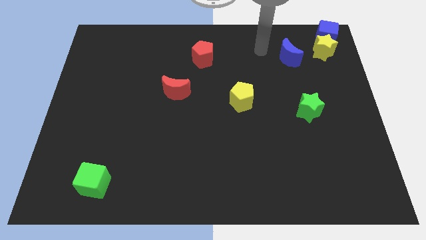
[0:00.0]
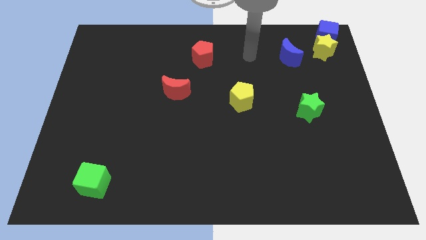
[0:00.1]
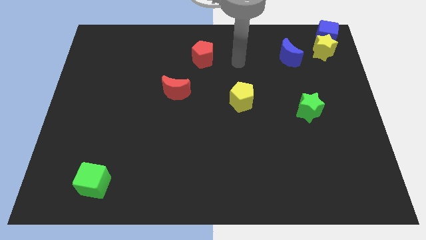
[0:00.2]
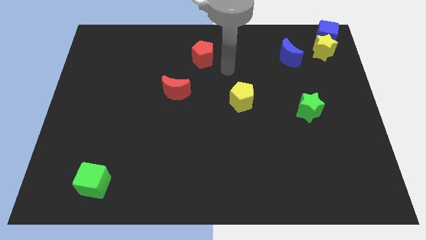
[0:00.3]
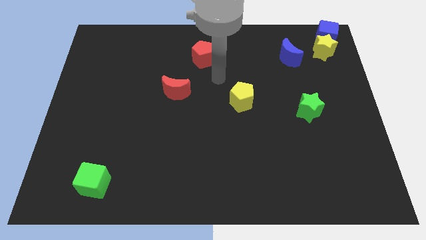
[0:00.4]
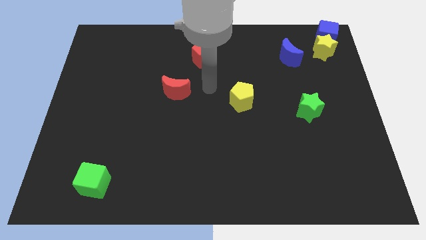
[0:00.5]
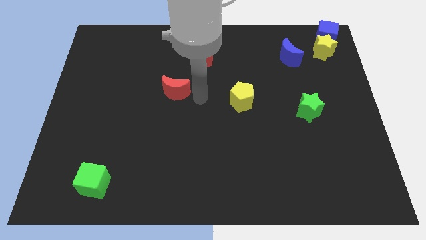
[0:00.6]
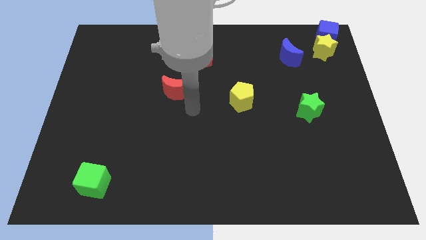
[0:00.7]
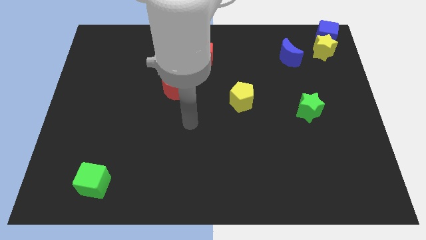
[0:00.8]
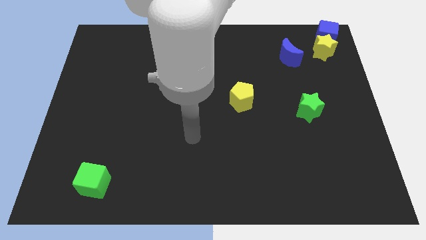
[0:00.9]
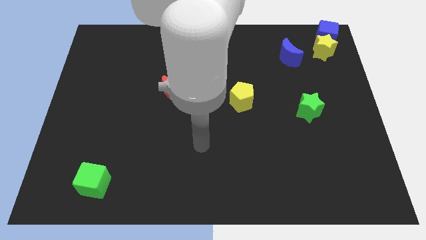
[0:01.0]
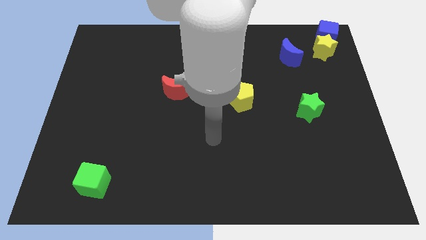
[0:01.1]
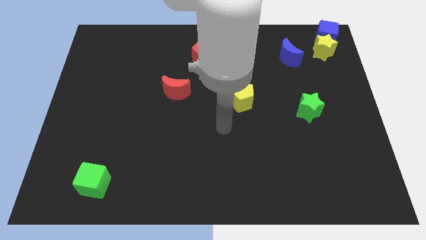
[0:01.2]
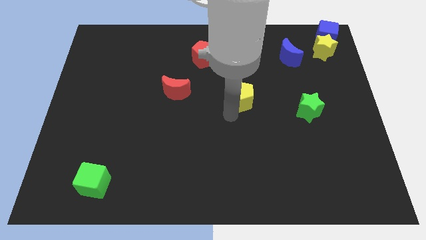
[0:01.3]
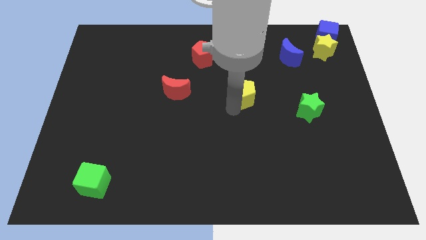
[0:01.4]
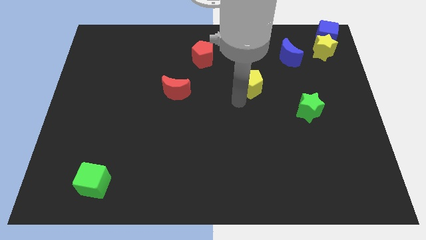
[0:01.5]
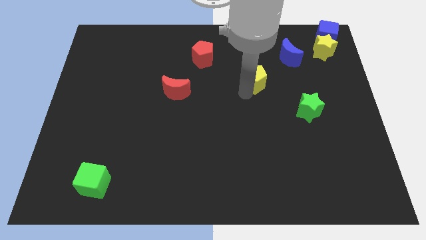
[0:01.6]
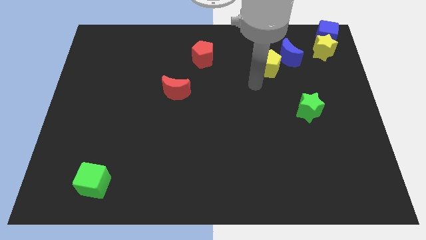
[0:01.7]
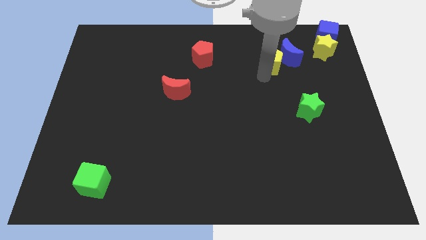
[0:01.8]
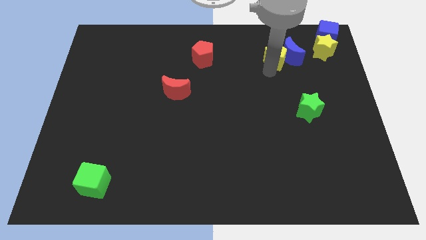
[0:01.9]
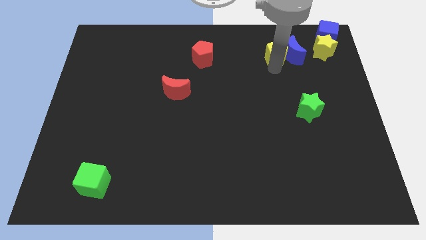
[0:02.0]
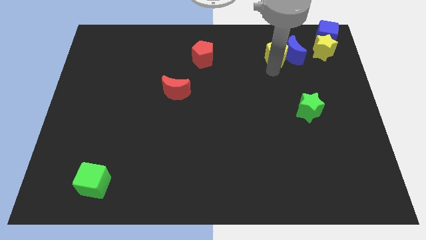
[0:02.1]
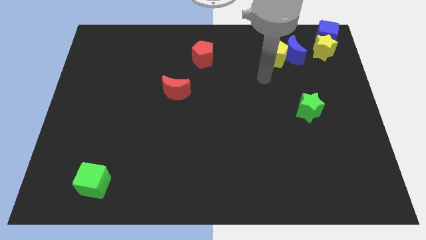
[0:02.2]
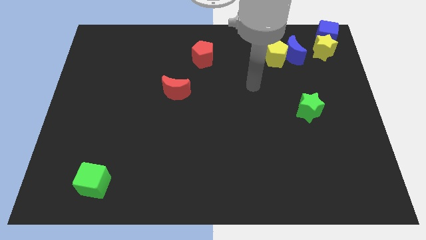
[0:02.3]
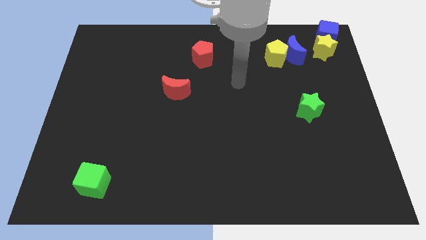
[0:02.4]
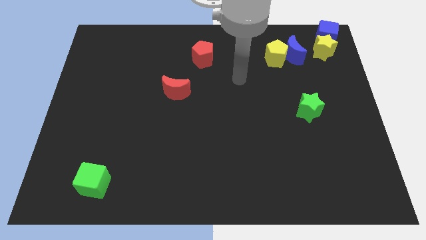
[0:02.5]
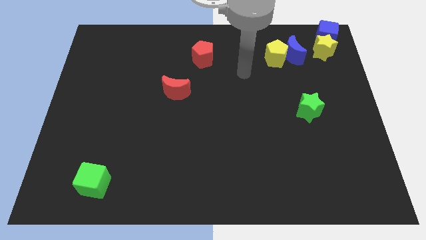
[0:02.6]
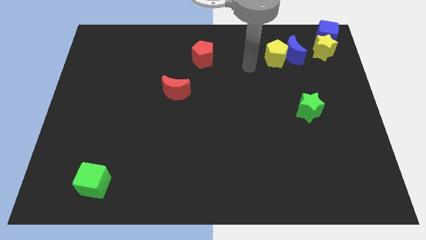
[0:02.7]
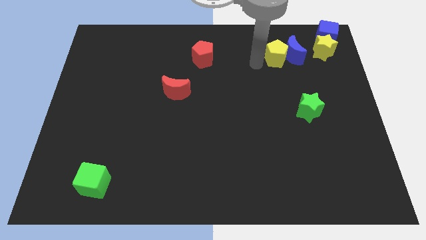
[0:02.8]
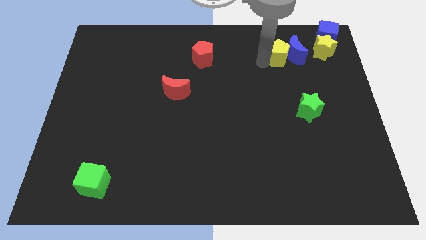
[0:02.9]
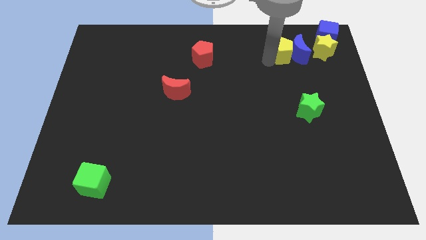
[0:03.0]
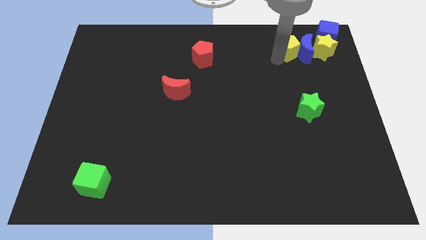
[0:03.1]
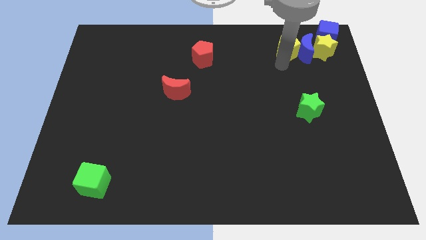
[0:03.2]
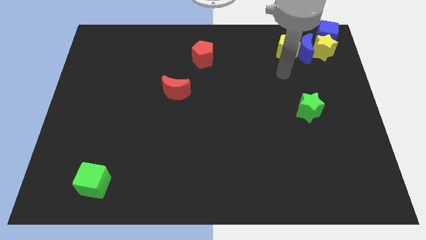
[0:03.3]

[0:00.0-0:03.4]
push the yellow pentagon to the left of the blue crescent

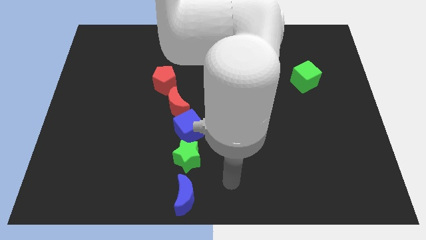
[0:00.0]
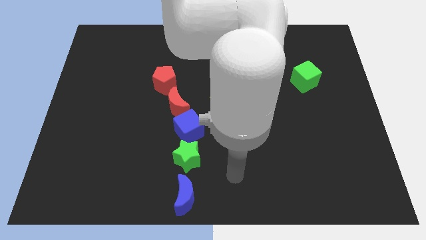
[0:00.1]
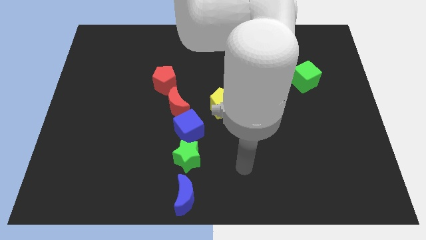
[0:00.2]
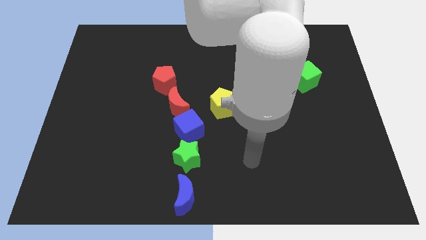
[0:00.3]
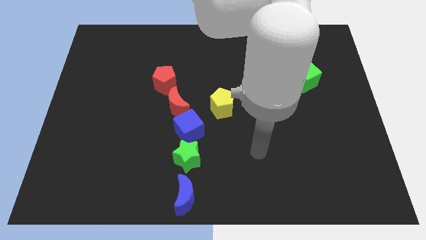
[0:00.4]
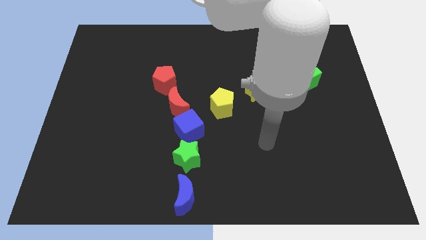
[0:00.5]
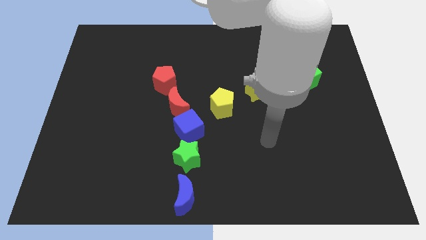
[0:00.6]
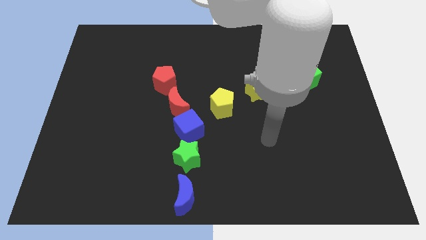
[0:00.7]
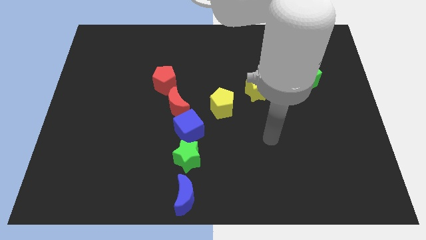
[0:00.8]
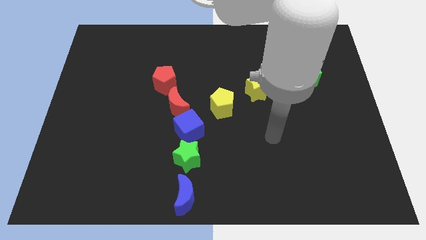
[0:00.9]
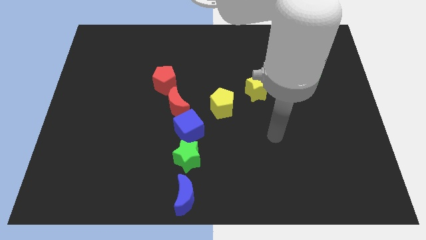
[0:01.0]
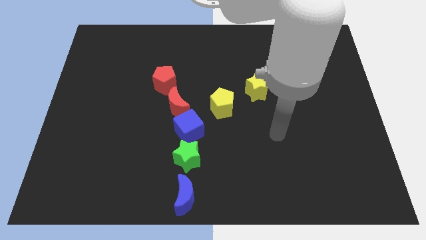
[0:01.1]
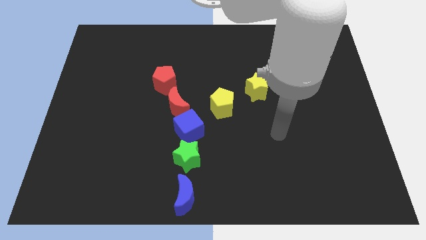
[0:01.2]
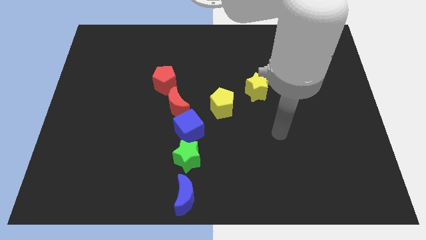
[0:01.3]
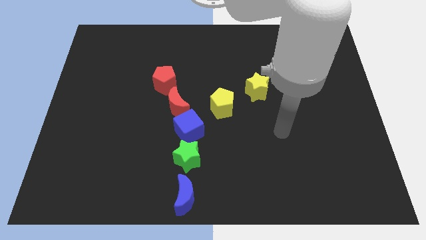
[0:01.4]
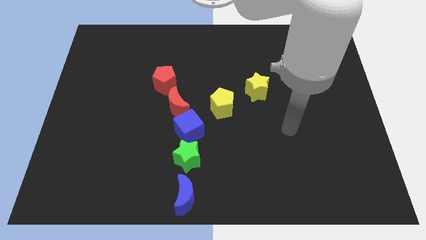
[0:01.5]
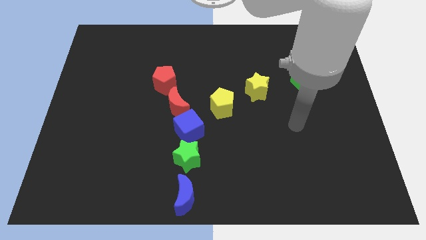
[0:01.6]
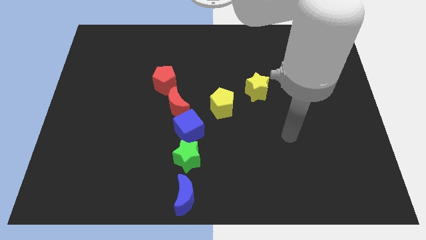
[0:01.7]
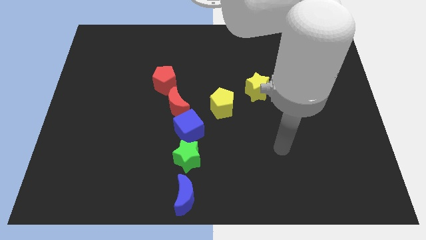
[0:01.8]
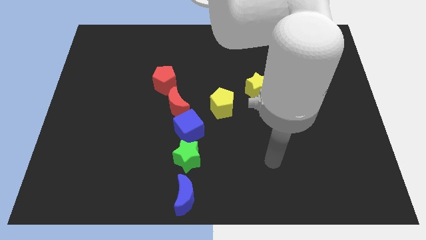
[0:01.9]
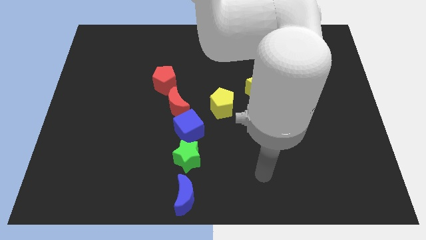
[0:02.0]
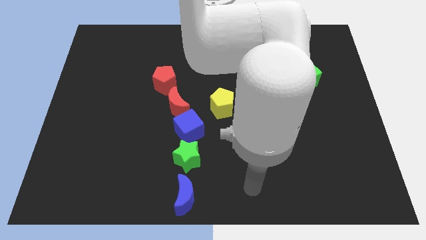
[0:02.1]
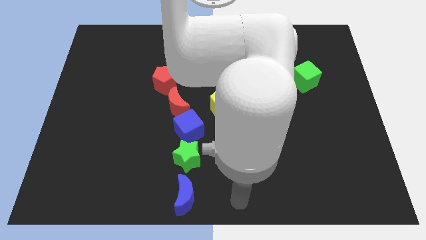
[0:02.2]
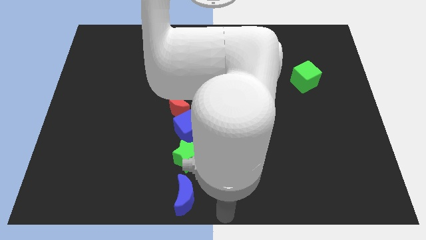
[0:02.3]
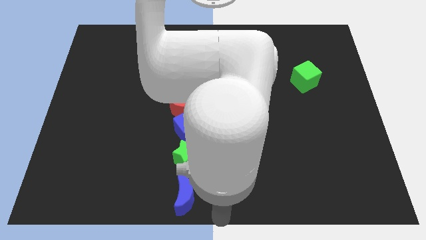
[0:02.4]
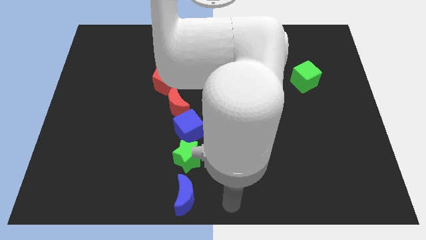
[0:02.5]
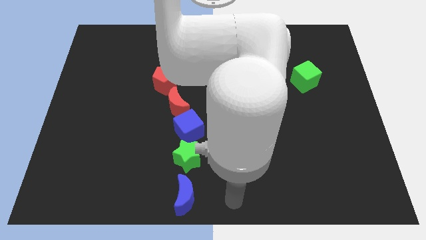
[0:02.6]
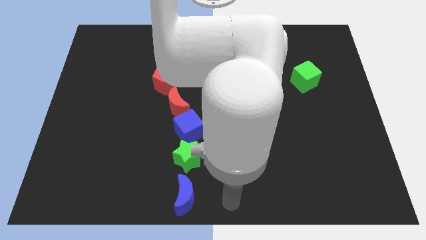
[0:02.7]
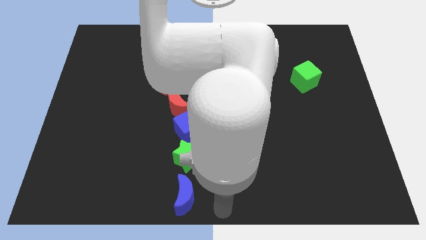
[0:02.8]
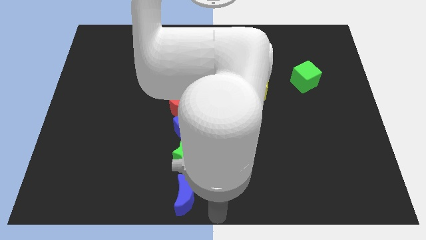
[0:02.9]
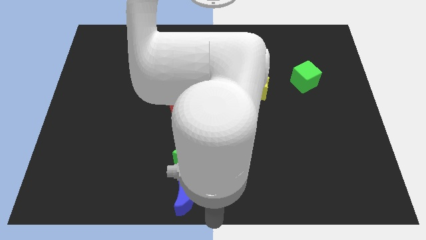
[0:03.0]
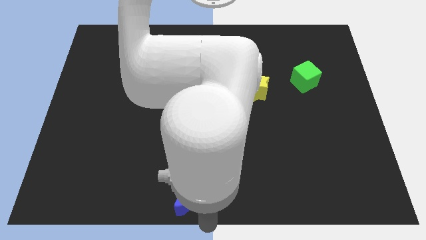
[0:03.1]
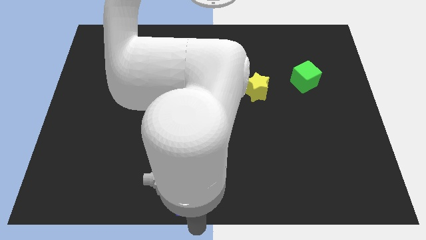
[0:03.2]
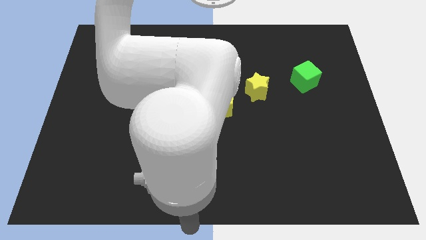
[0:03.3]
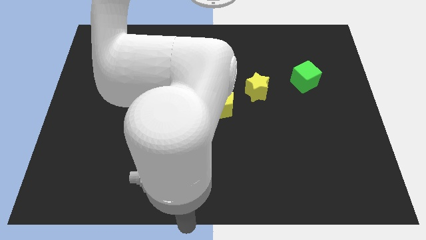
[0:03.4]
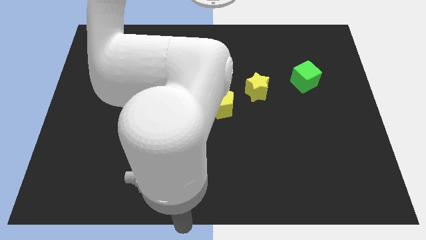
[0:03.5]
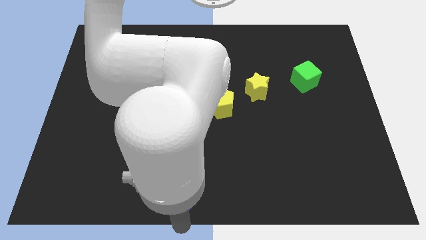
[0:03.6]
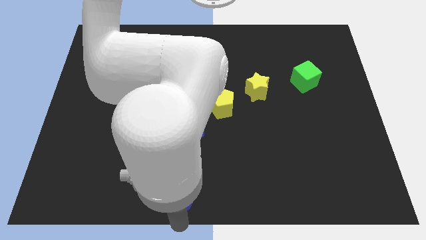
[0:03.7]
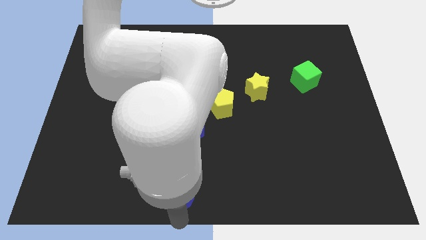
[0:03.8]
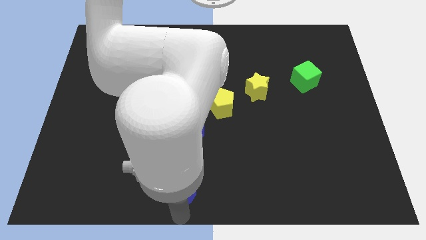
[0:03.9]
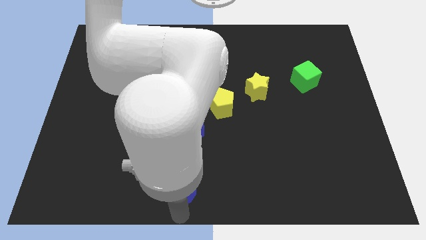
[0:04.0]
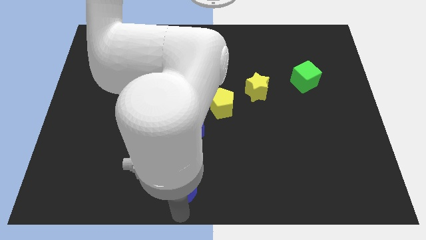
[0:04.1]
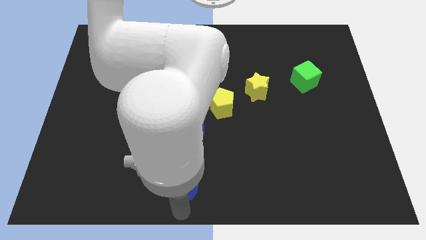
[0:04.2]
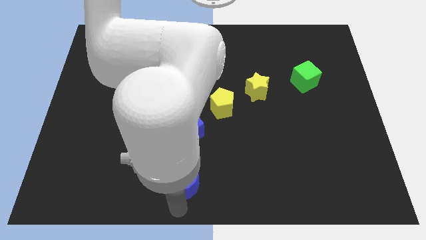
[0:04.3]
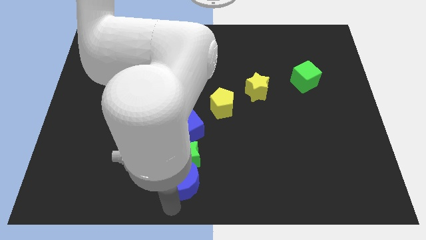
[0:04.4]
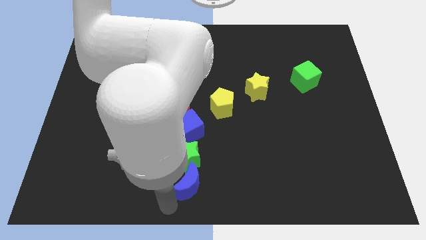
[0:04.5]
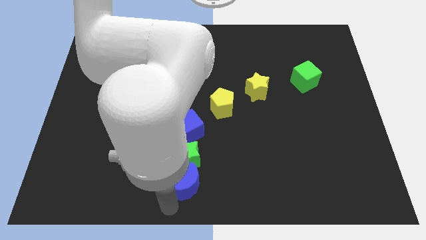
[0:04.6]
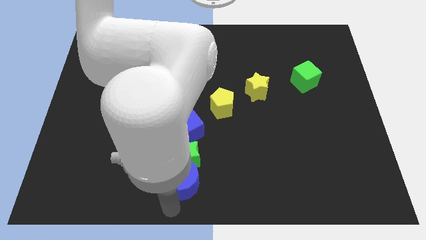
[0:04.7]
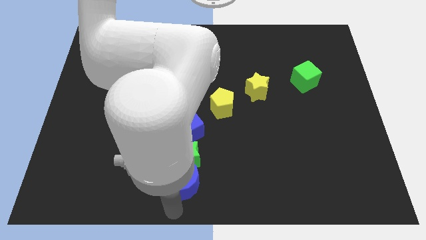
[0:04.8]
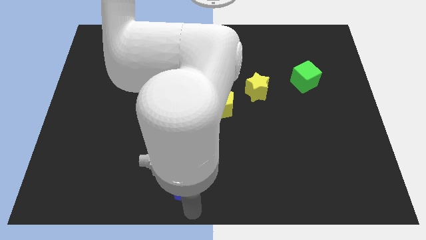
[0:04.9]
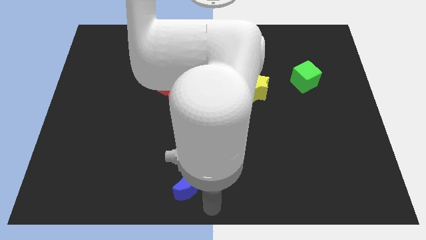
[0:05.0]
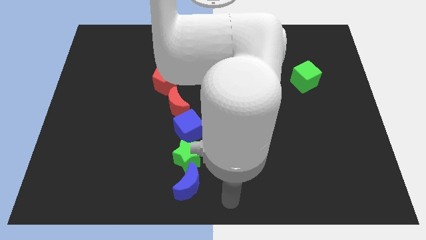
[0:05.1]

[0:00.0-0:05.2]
adjust the blue moon closer to the bottom of the green star

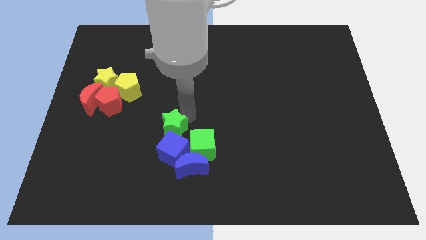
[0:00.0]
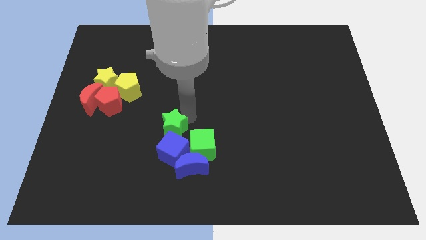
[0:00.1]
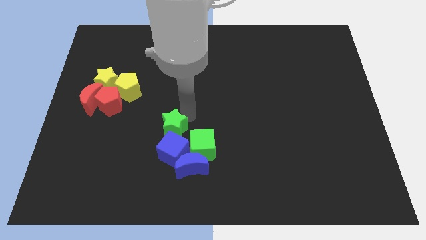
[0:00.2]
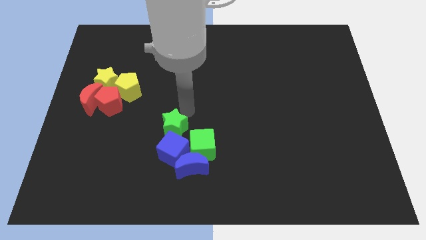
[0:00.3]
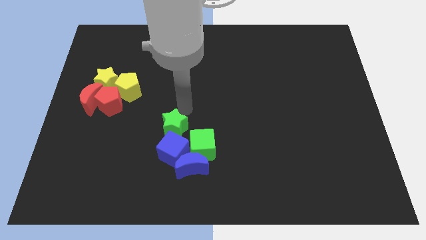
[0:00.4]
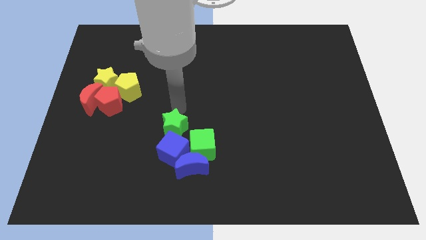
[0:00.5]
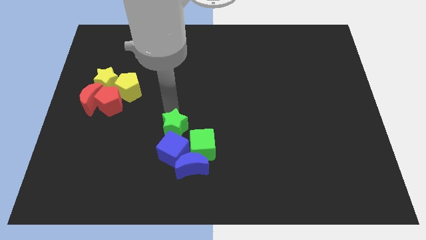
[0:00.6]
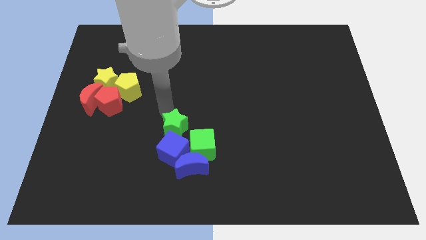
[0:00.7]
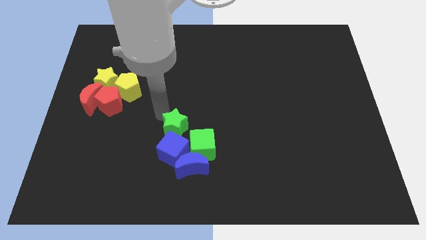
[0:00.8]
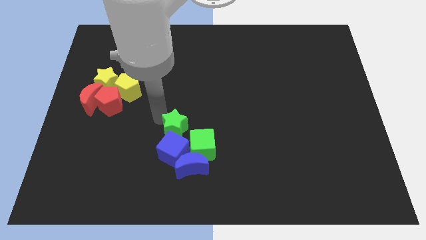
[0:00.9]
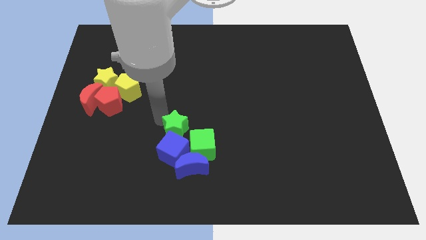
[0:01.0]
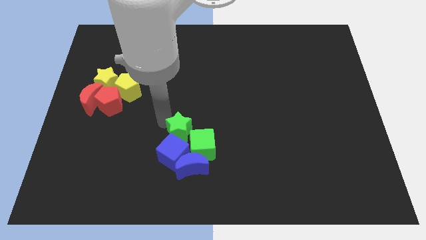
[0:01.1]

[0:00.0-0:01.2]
push the green star into the blue cube
